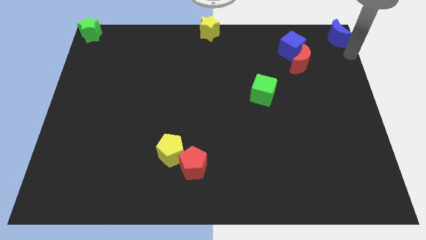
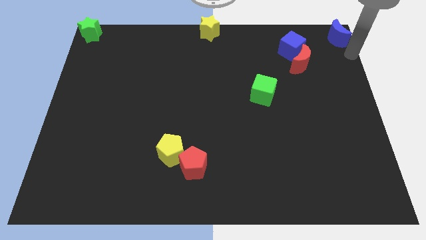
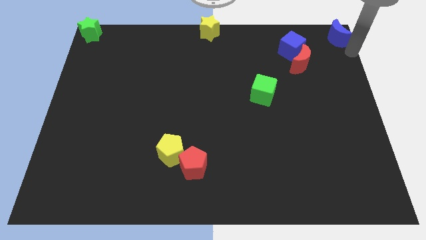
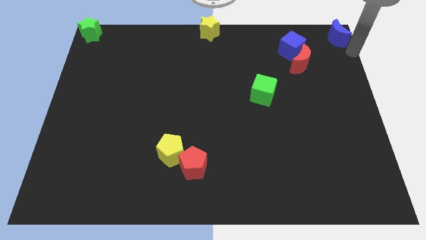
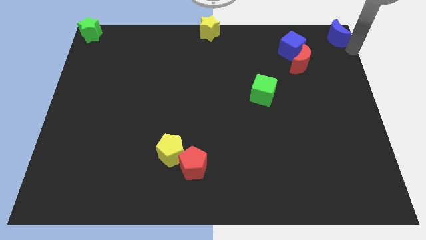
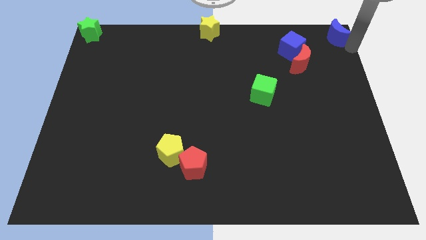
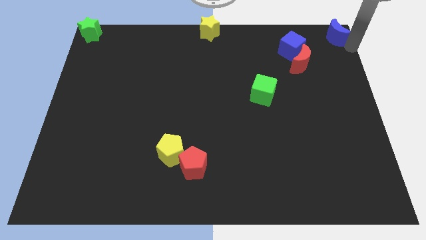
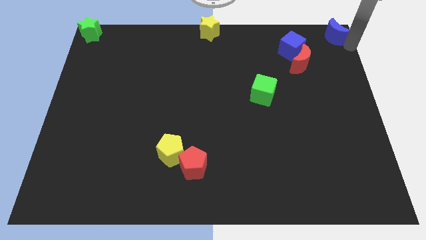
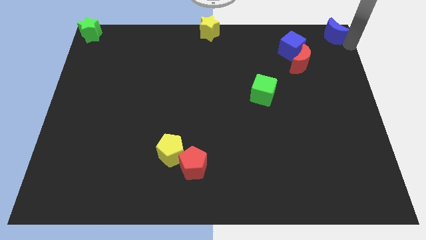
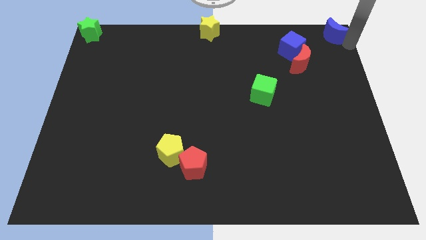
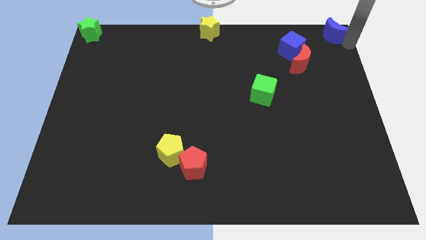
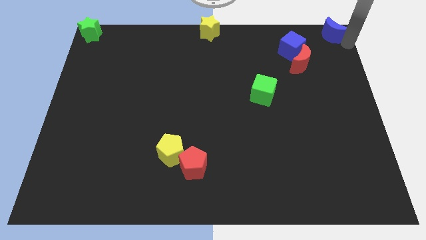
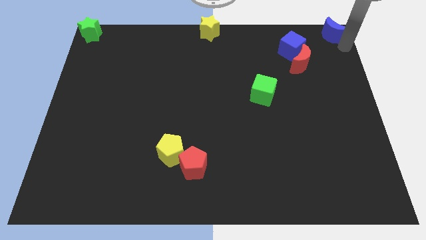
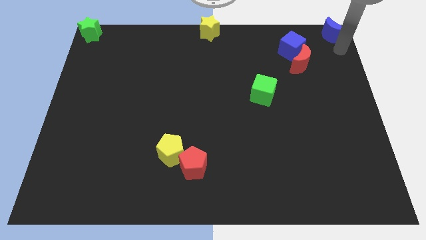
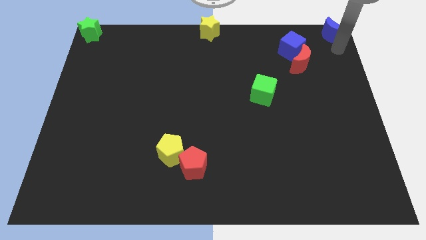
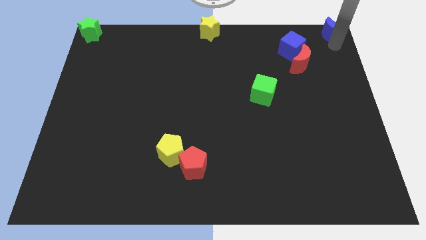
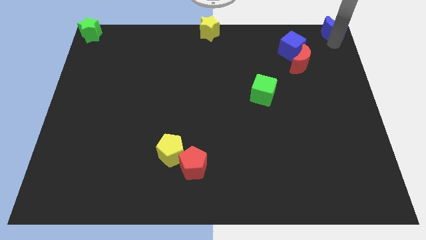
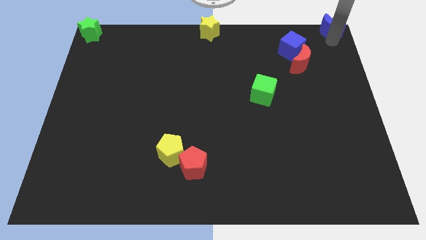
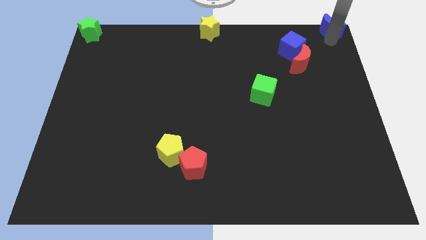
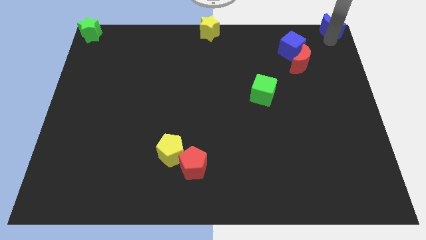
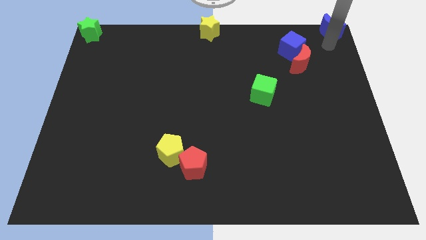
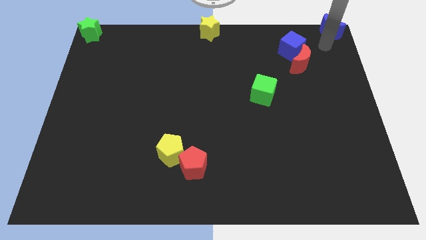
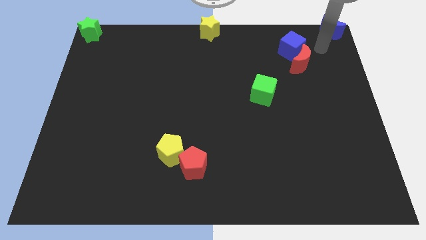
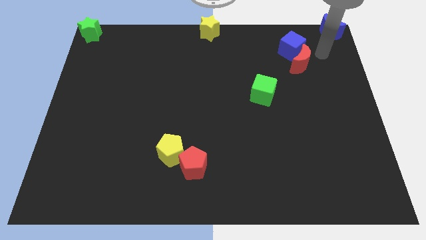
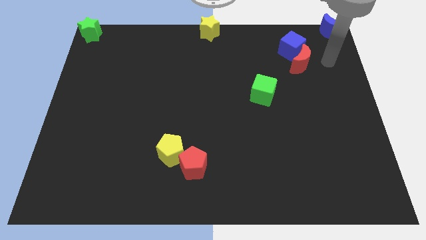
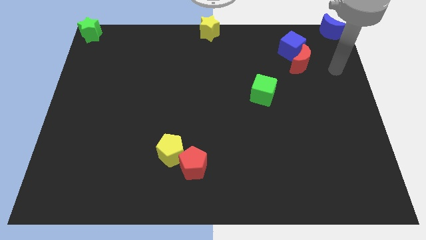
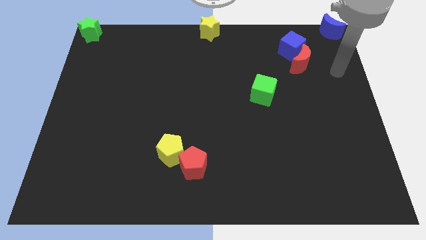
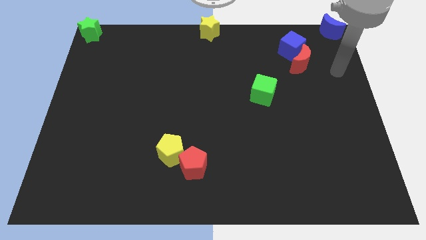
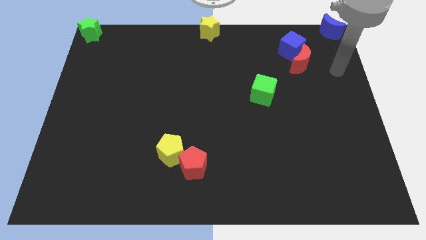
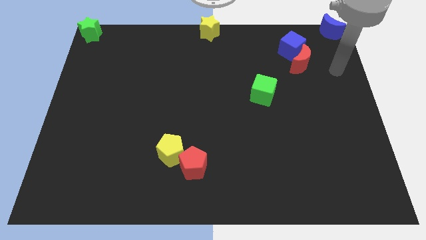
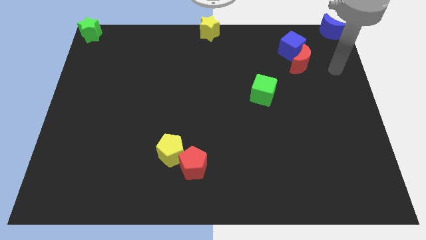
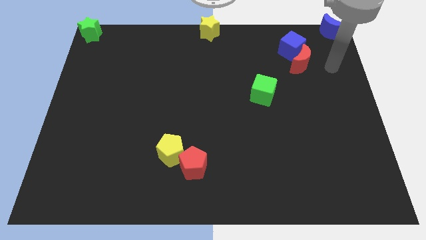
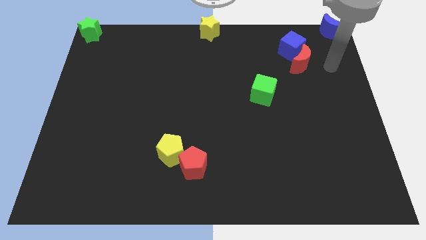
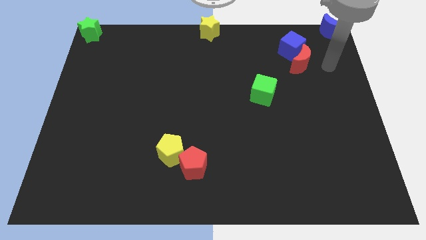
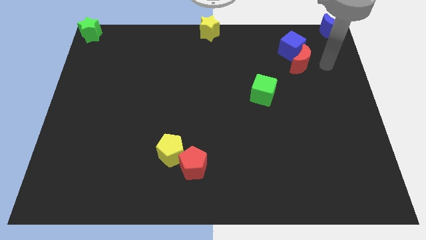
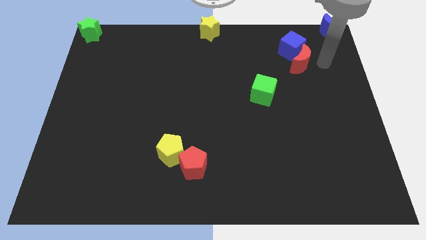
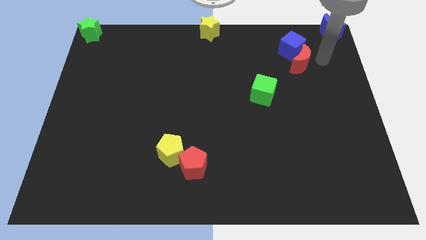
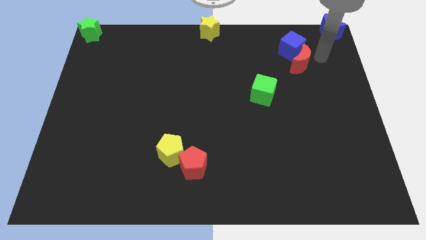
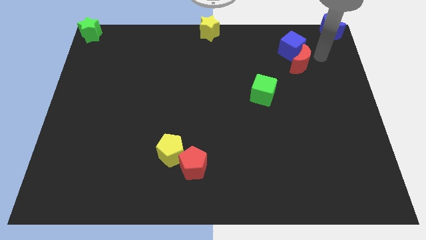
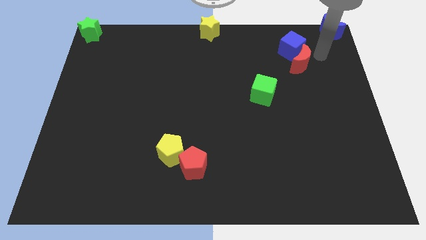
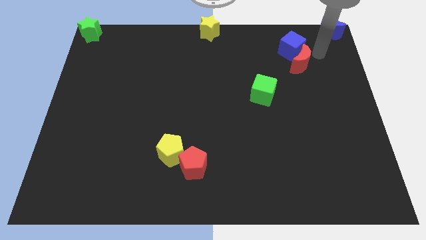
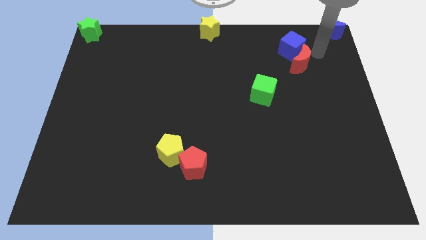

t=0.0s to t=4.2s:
slightly push blue moon to the top right

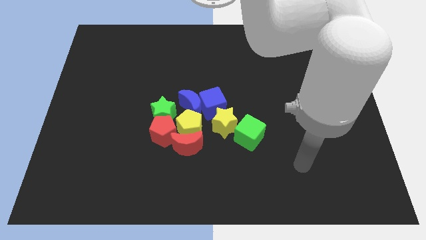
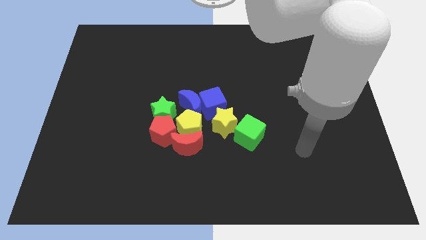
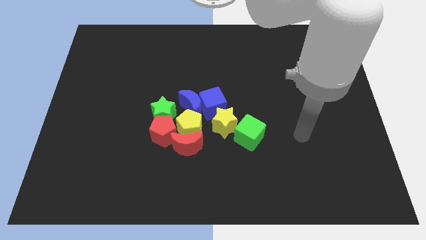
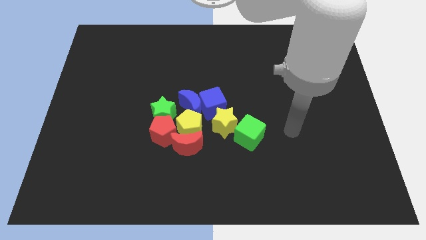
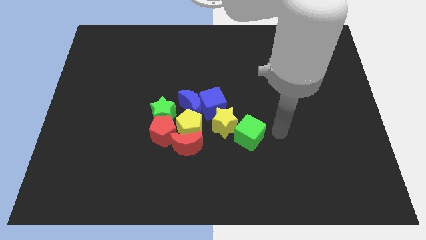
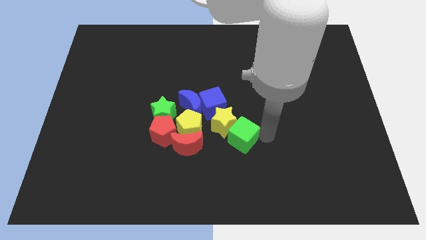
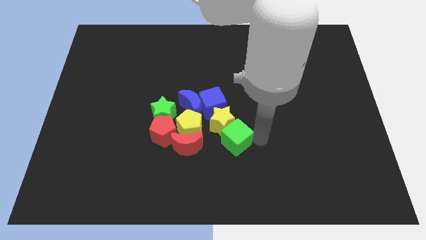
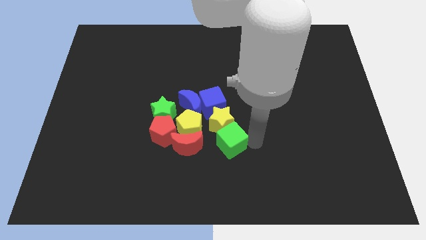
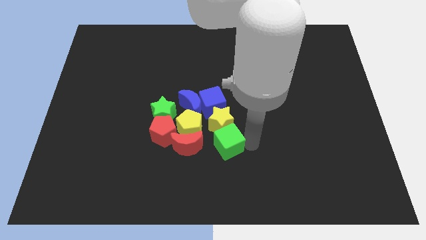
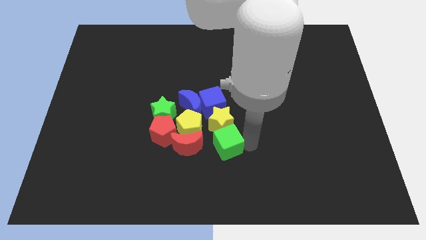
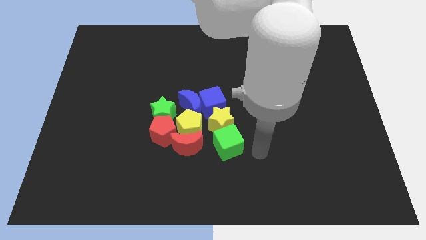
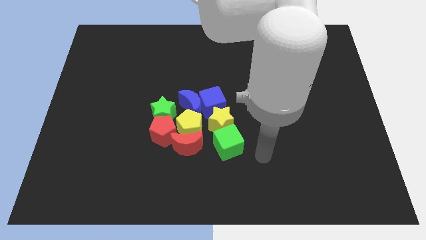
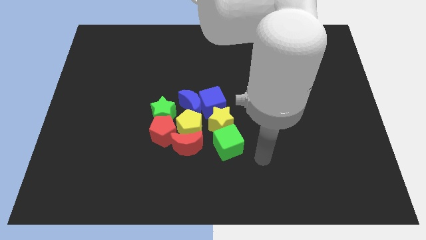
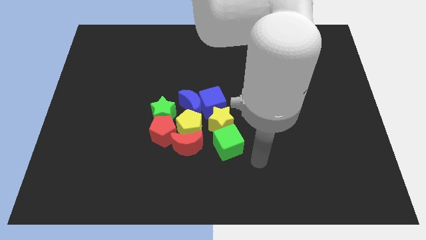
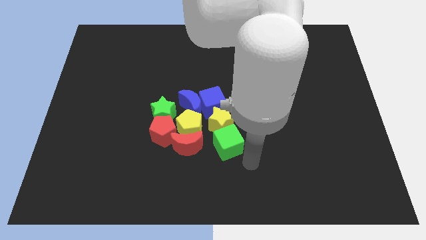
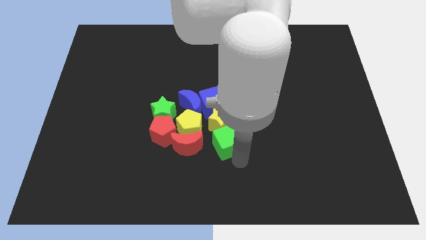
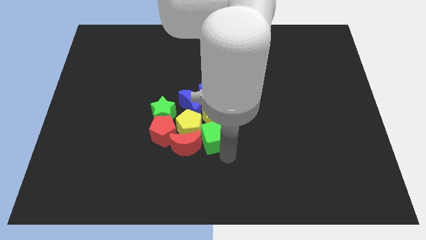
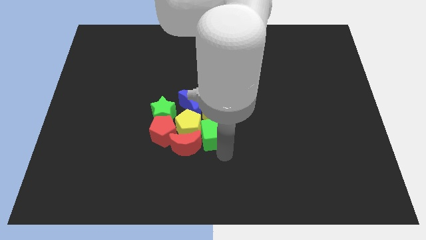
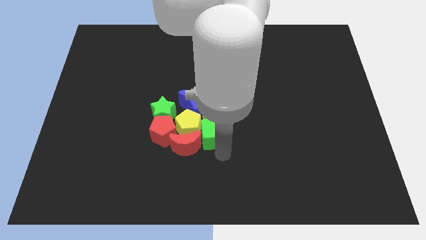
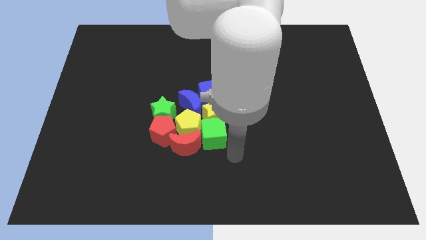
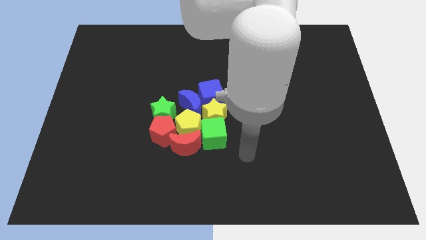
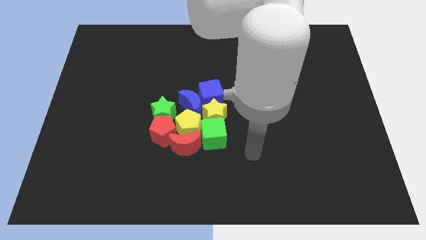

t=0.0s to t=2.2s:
move green cube into yellow star

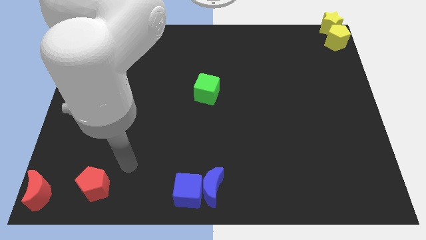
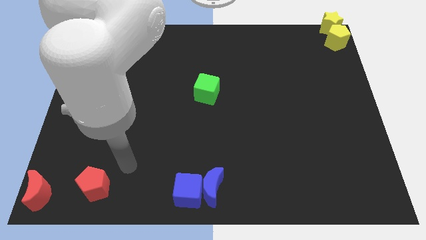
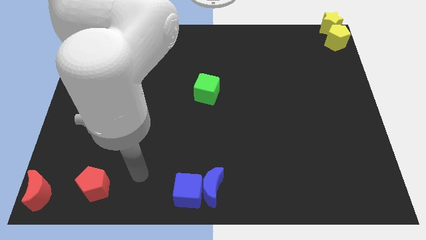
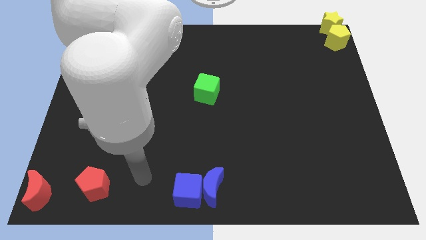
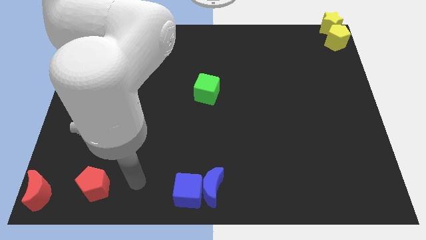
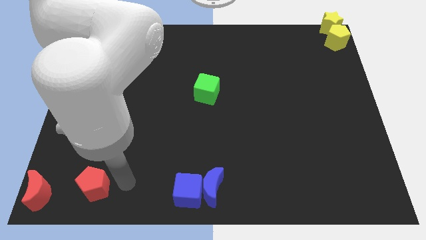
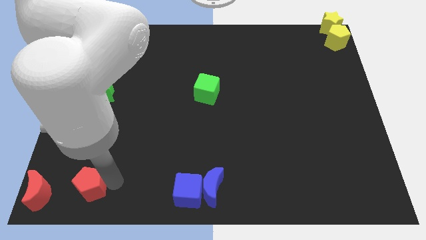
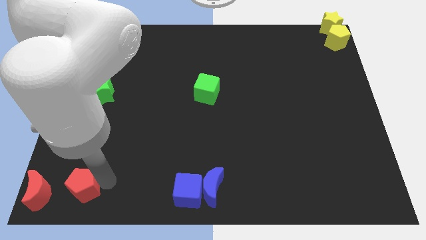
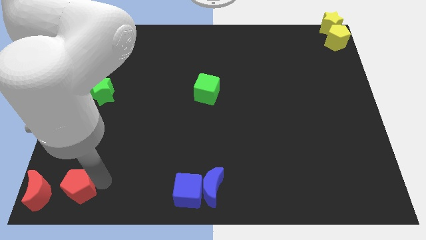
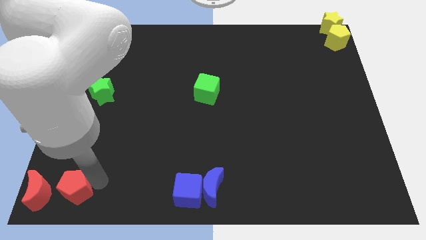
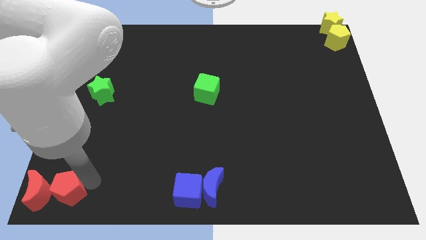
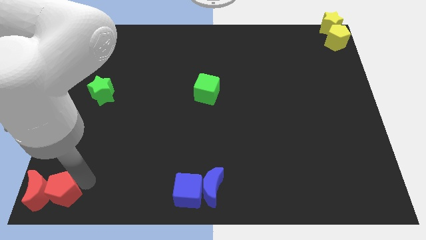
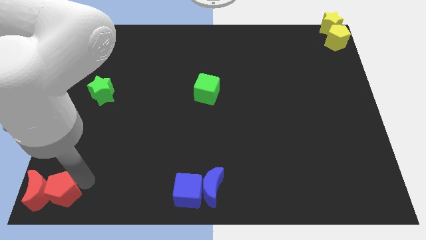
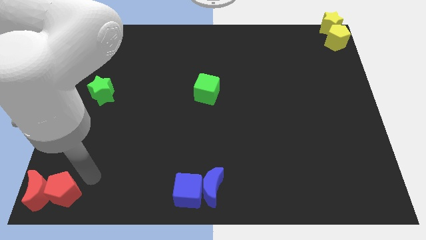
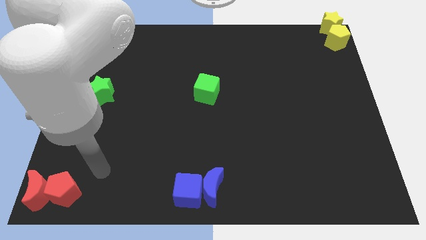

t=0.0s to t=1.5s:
push the red pentagon close to the red crescent

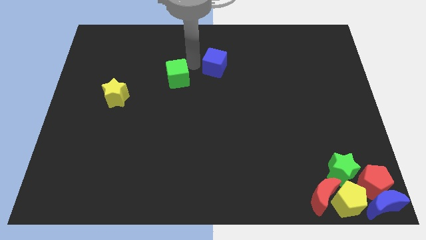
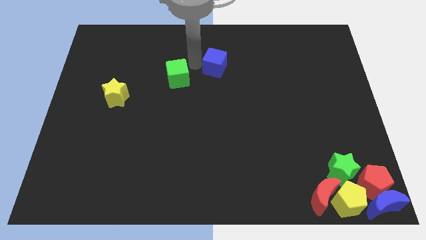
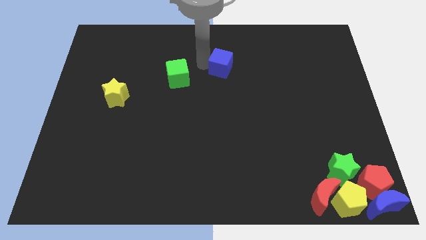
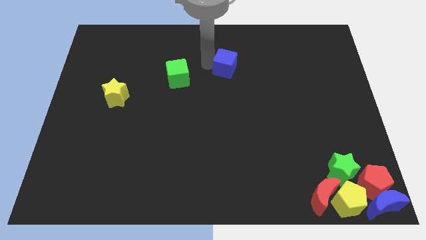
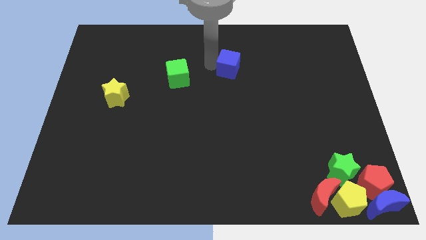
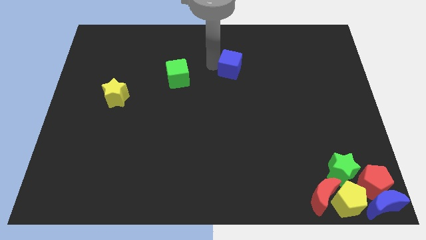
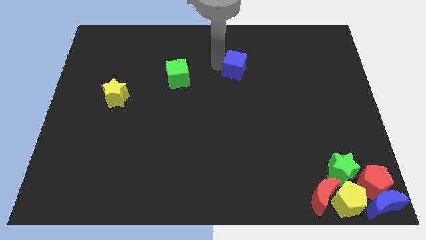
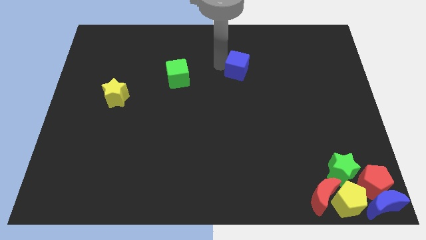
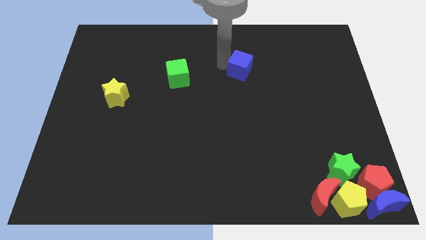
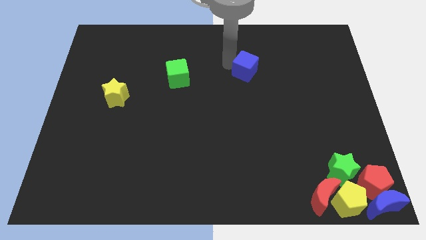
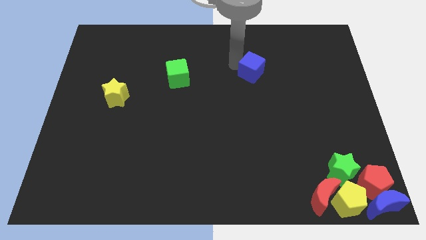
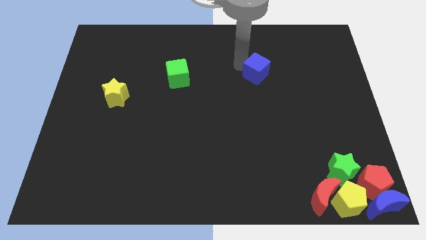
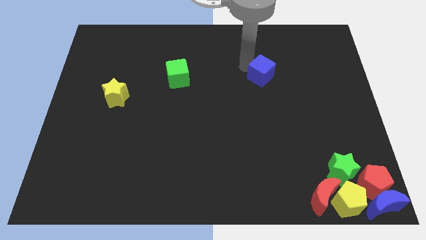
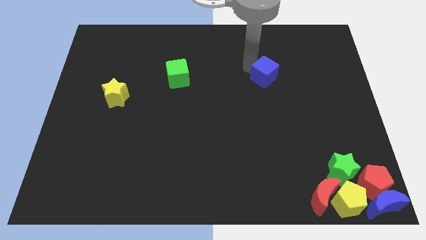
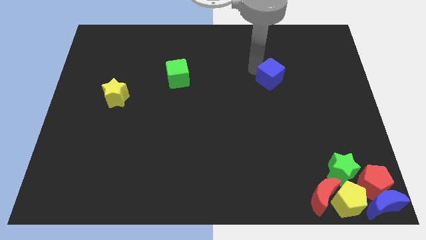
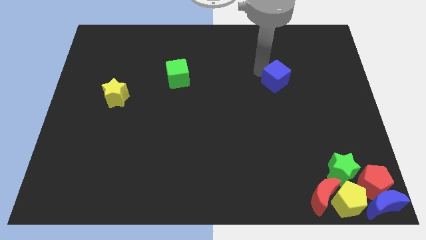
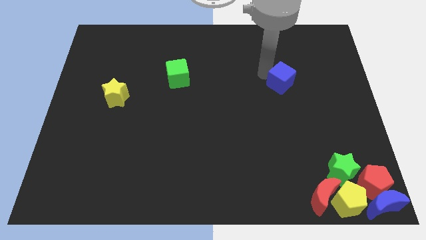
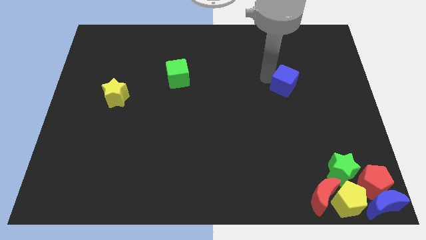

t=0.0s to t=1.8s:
move the blue cube to the right
